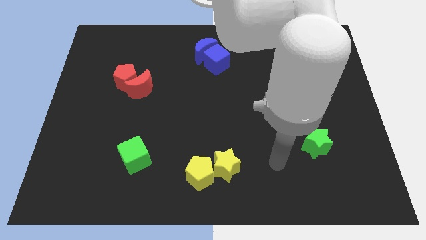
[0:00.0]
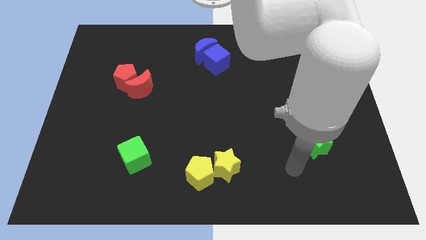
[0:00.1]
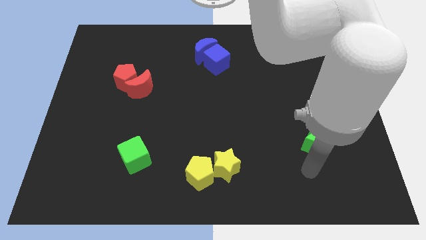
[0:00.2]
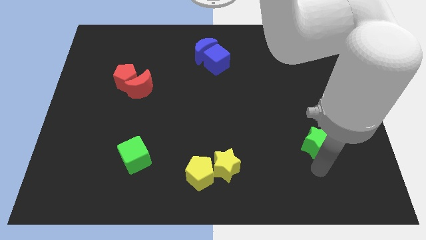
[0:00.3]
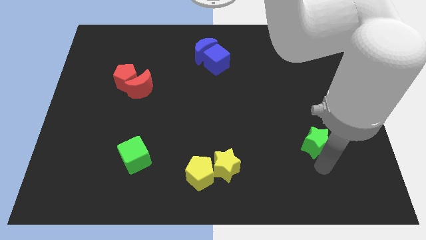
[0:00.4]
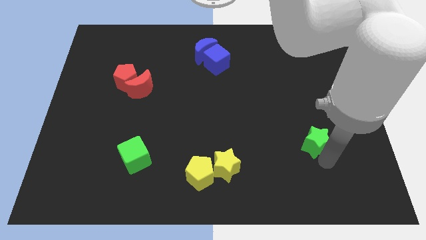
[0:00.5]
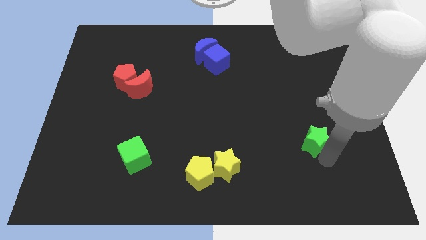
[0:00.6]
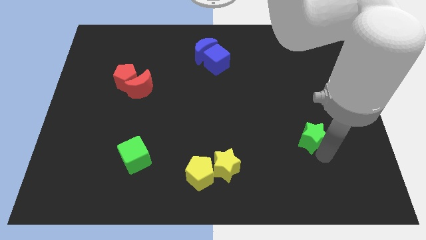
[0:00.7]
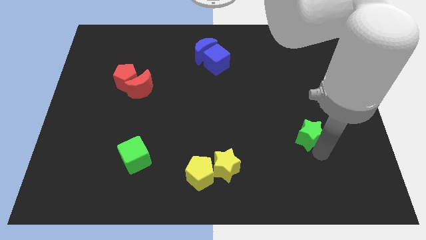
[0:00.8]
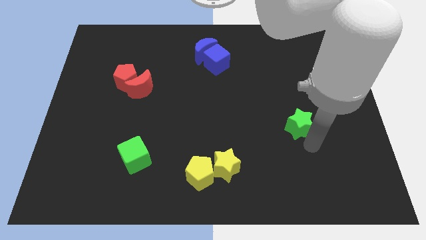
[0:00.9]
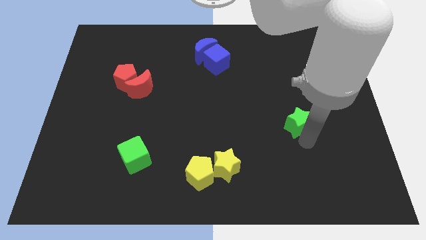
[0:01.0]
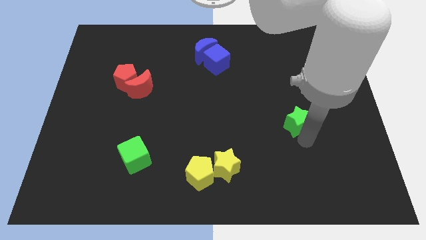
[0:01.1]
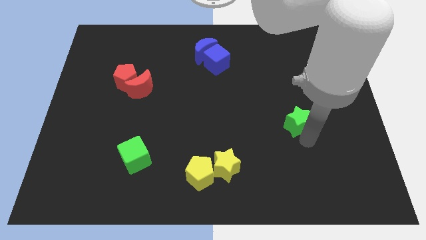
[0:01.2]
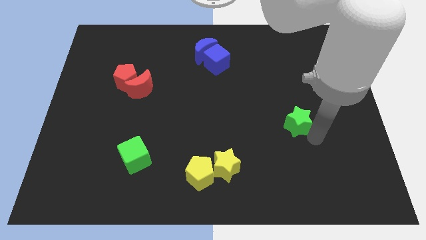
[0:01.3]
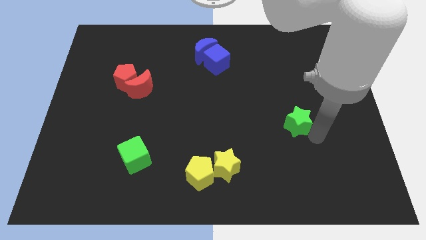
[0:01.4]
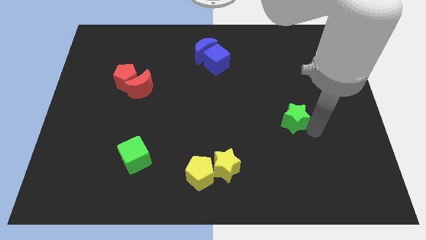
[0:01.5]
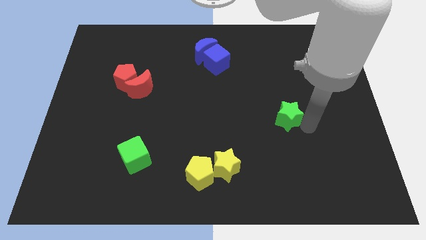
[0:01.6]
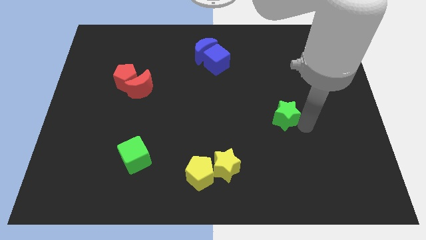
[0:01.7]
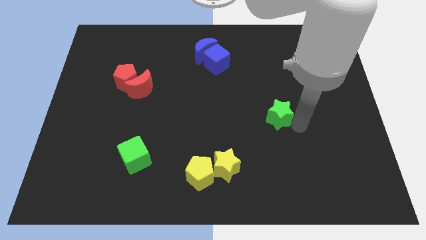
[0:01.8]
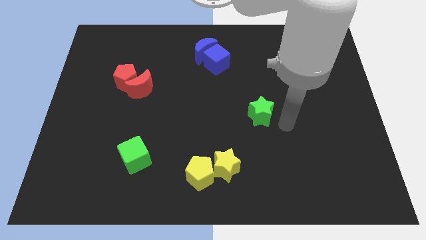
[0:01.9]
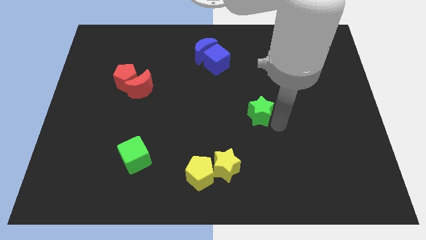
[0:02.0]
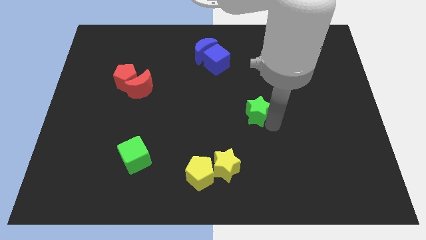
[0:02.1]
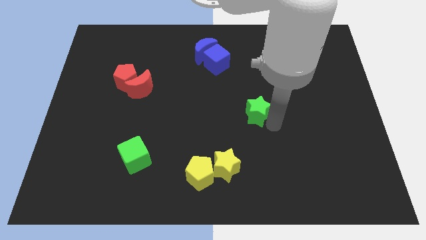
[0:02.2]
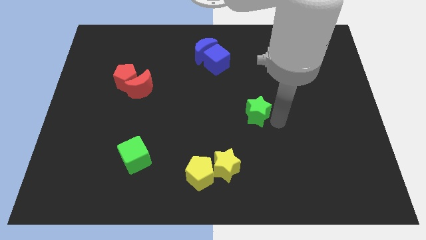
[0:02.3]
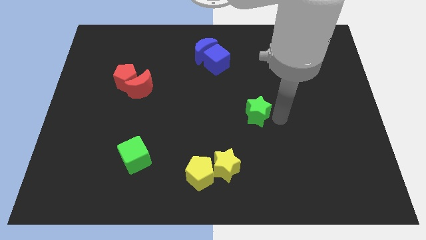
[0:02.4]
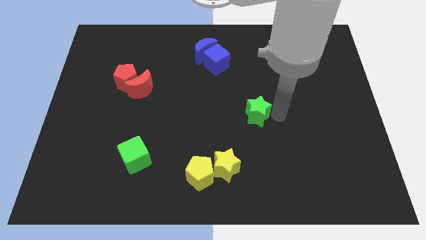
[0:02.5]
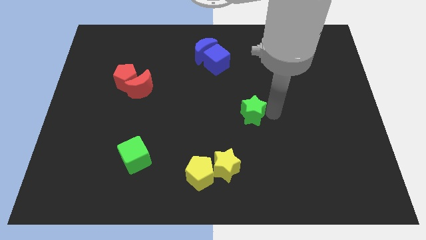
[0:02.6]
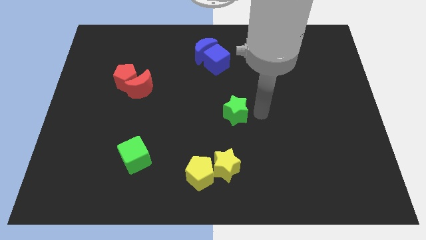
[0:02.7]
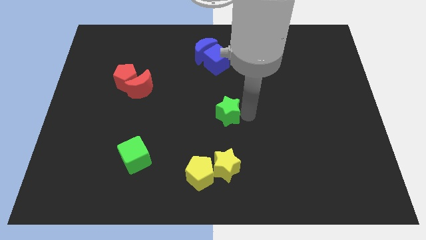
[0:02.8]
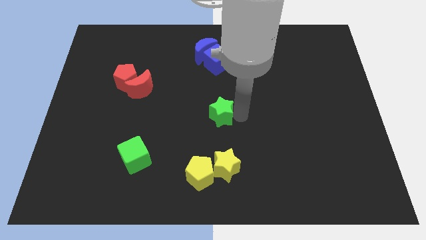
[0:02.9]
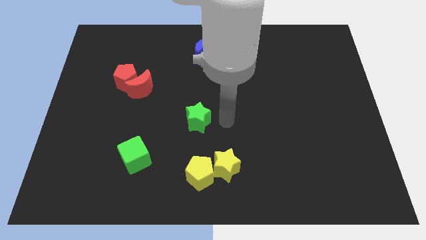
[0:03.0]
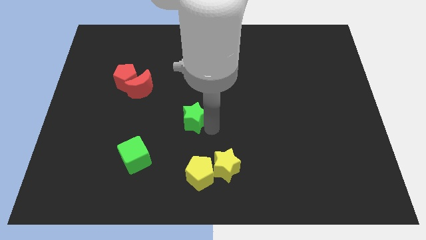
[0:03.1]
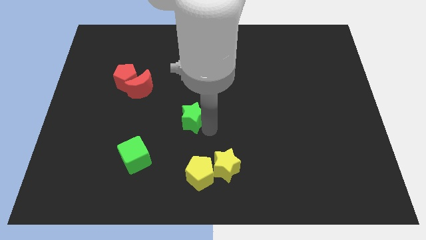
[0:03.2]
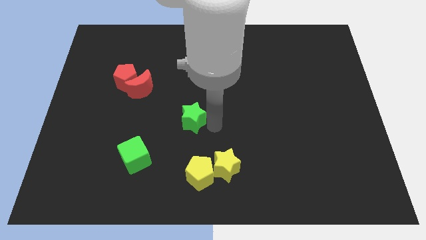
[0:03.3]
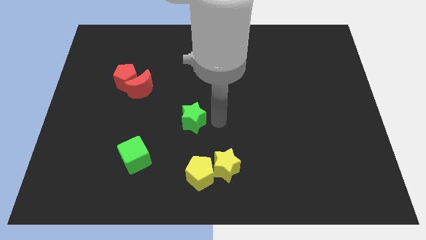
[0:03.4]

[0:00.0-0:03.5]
place the green star above the yellow pentagon

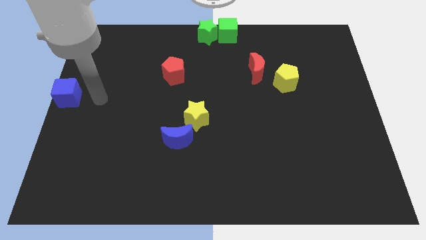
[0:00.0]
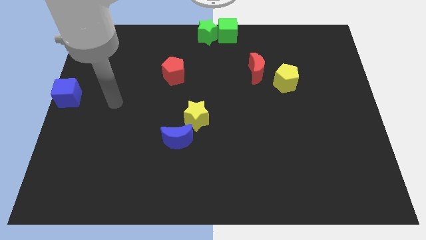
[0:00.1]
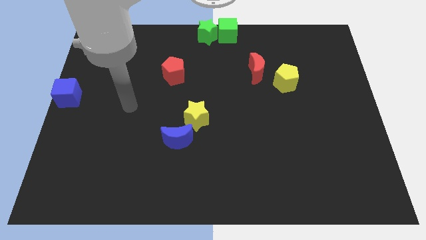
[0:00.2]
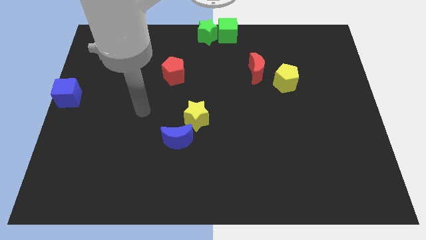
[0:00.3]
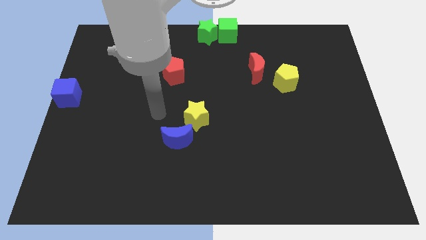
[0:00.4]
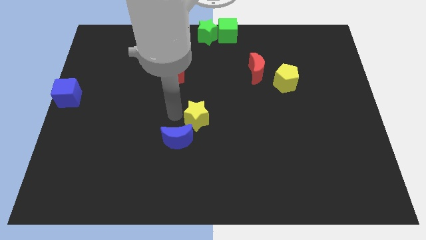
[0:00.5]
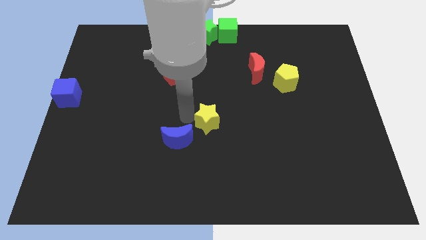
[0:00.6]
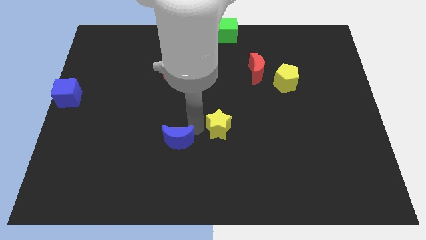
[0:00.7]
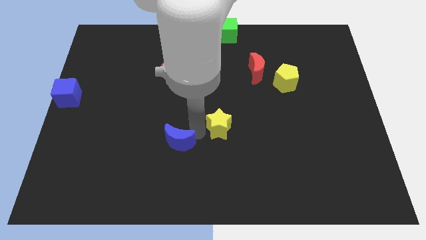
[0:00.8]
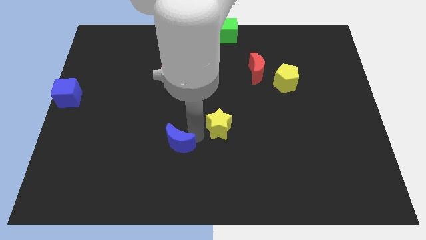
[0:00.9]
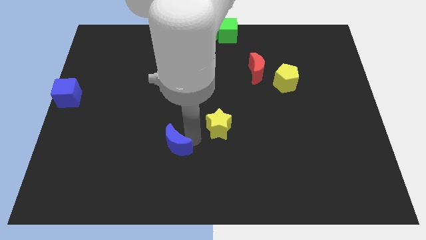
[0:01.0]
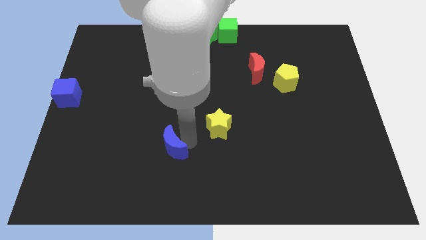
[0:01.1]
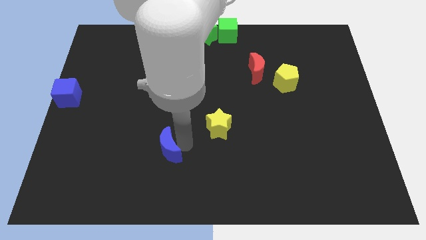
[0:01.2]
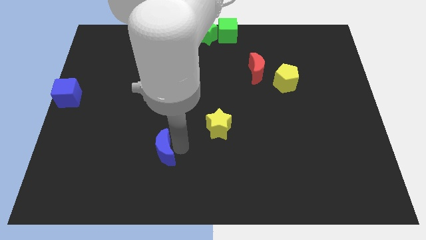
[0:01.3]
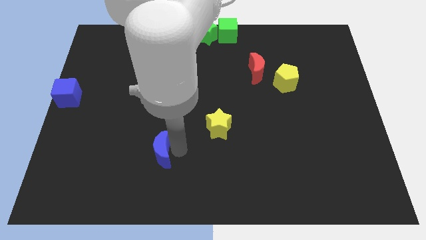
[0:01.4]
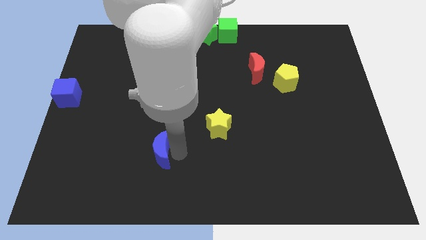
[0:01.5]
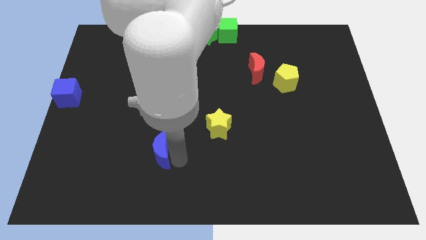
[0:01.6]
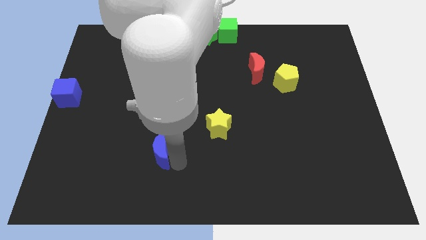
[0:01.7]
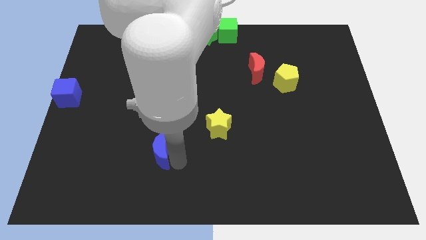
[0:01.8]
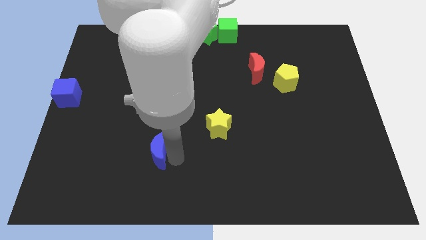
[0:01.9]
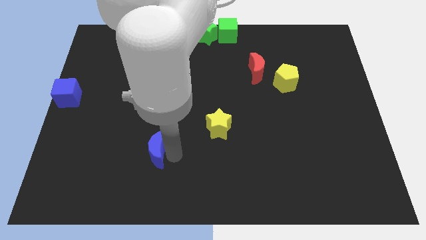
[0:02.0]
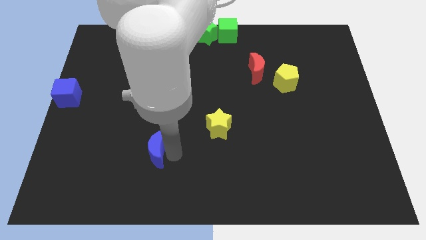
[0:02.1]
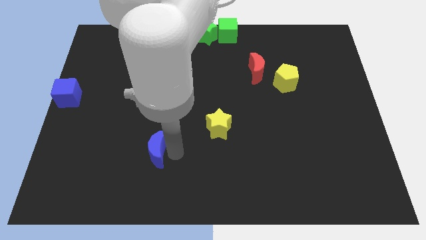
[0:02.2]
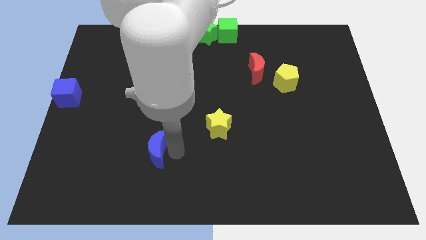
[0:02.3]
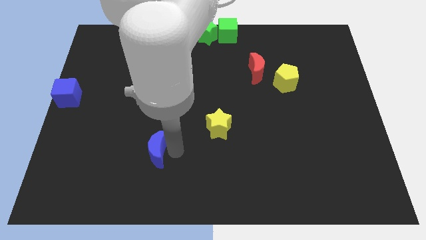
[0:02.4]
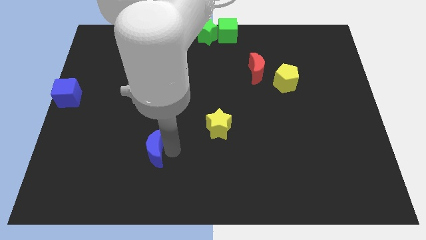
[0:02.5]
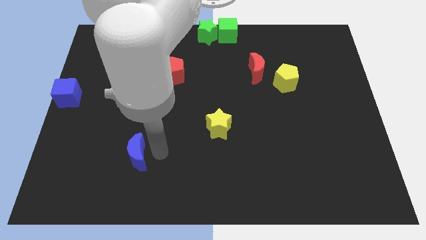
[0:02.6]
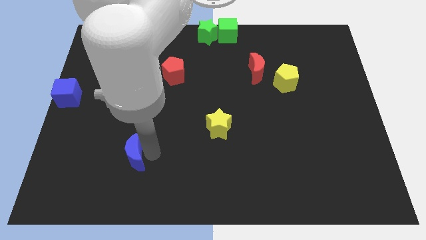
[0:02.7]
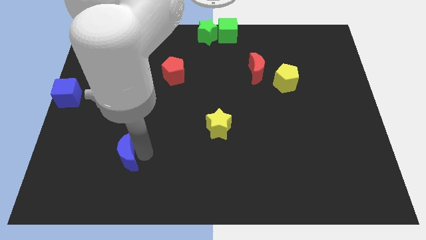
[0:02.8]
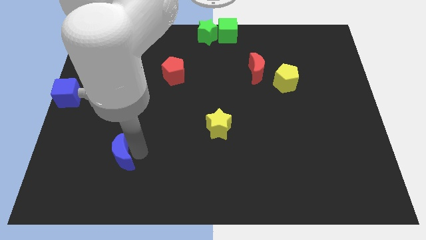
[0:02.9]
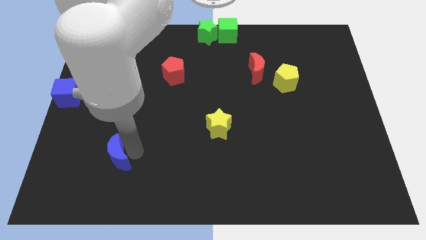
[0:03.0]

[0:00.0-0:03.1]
move the blue crescent away from the yellow star

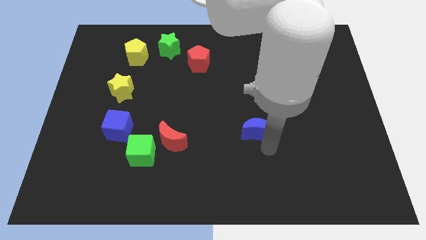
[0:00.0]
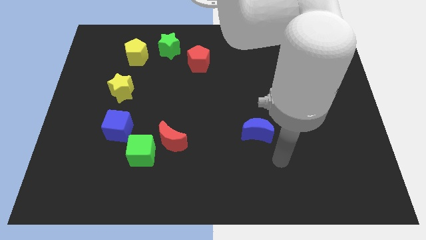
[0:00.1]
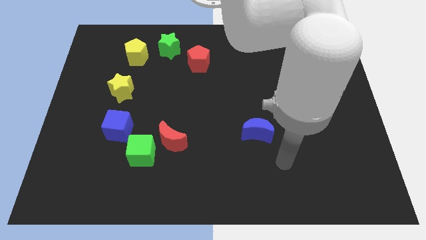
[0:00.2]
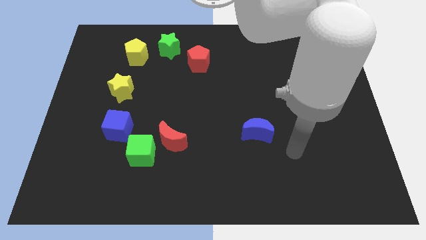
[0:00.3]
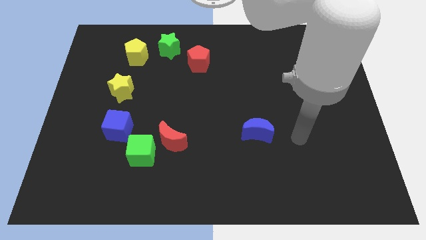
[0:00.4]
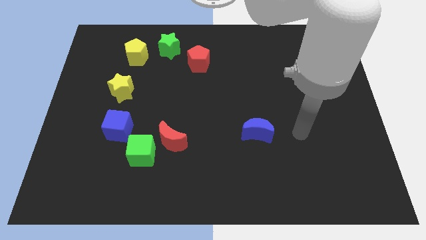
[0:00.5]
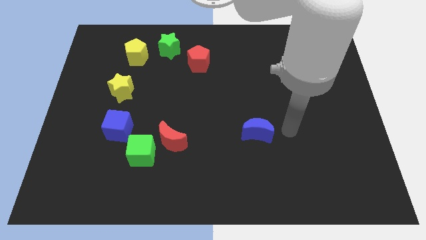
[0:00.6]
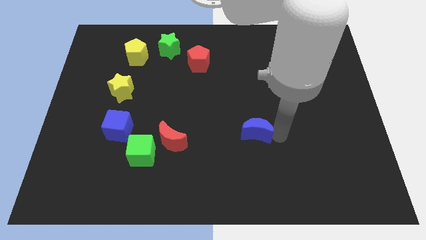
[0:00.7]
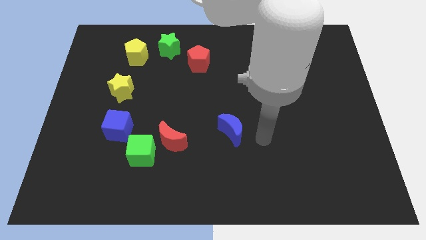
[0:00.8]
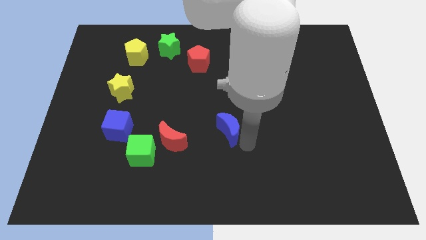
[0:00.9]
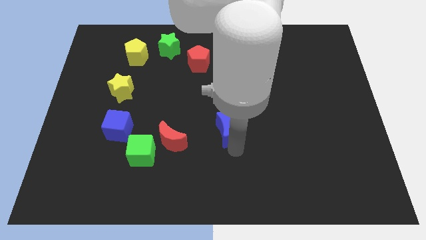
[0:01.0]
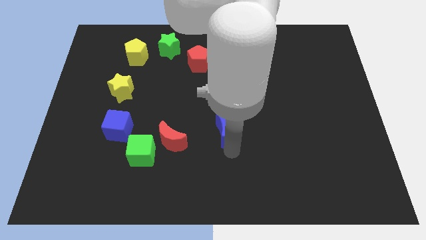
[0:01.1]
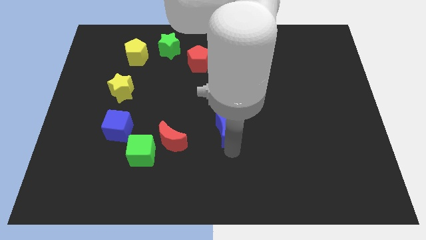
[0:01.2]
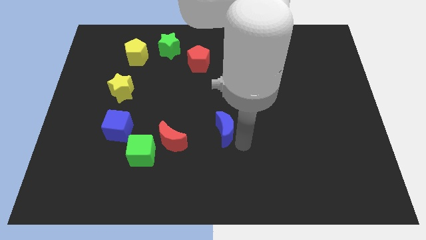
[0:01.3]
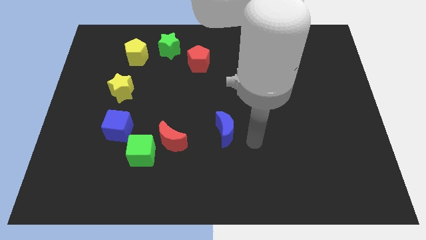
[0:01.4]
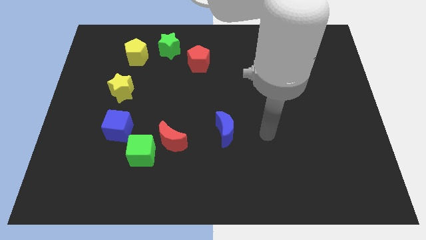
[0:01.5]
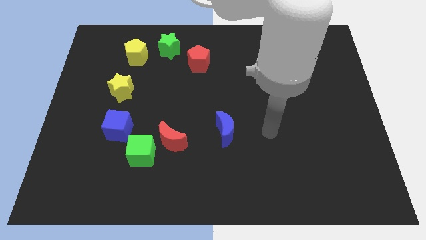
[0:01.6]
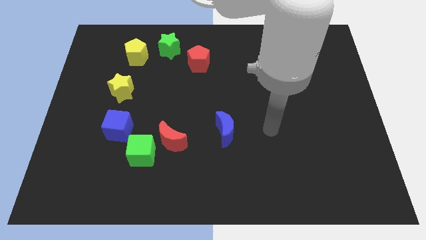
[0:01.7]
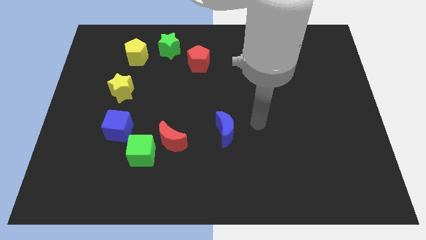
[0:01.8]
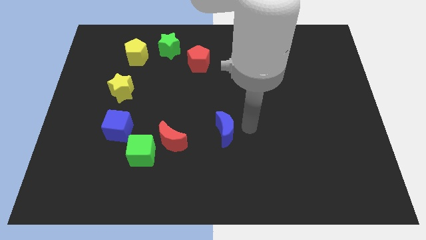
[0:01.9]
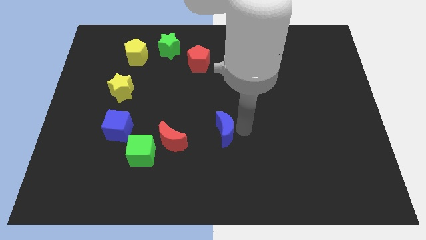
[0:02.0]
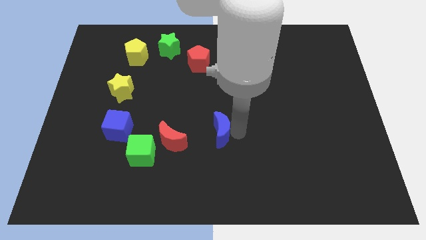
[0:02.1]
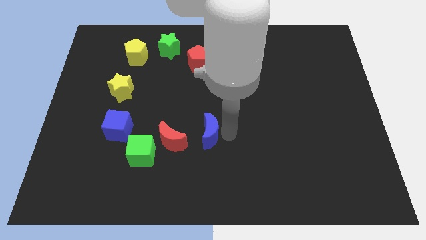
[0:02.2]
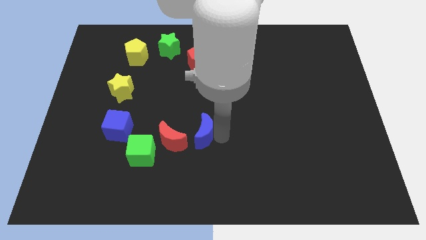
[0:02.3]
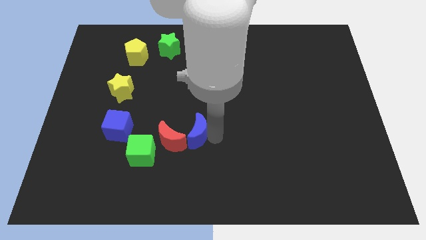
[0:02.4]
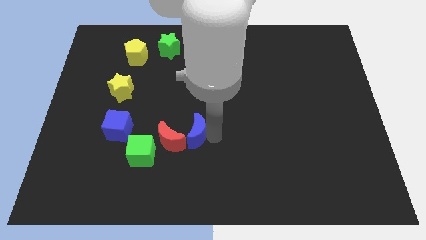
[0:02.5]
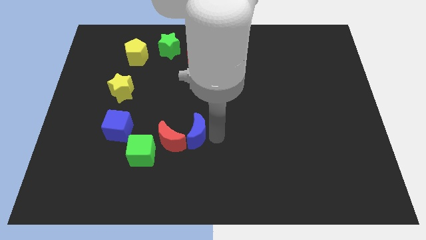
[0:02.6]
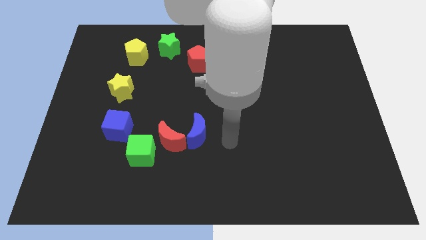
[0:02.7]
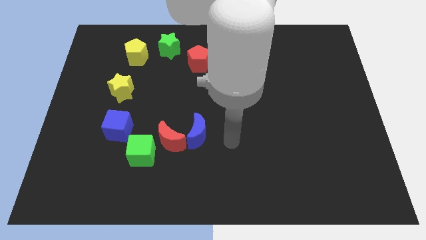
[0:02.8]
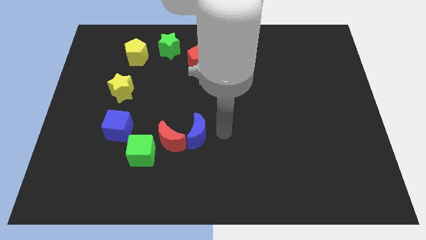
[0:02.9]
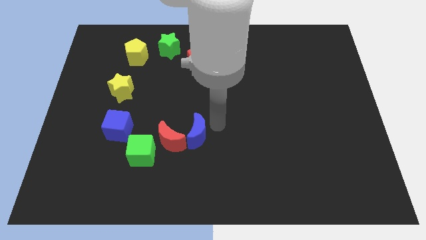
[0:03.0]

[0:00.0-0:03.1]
place the blue moon into the red moon
